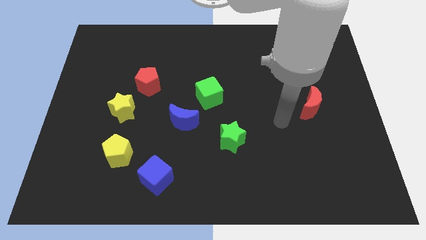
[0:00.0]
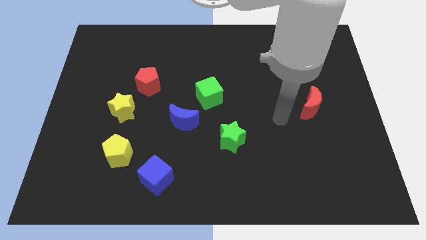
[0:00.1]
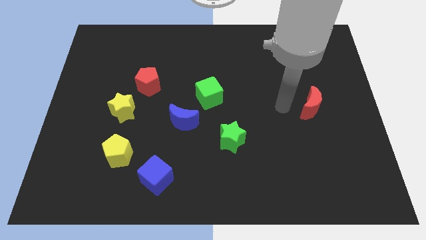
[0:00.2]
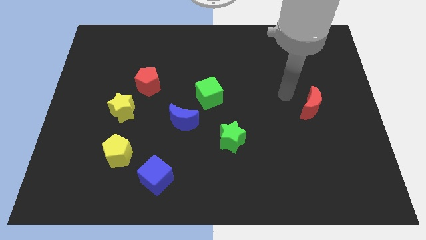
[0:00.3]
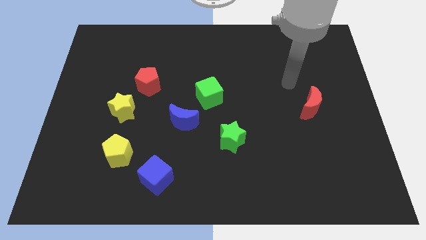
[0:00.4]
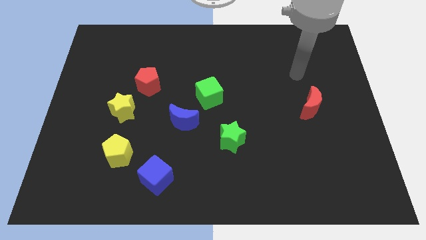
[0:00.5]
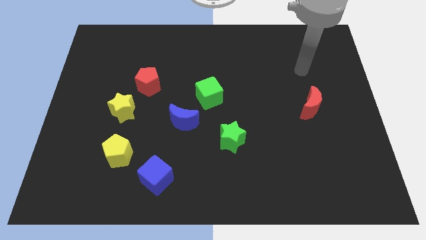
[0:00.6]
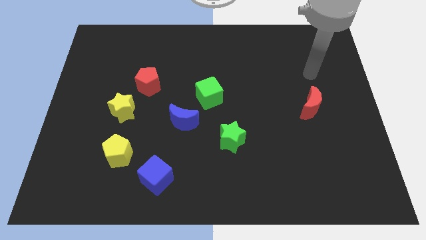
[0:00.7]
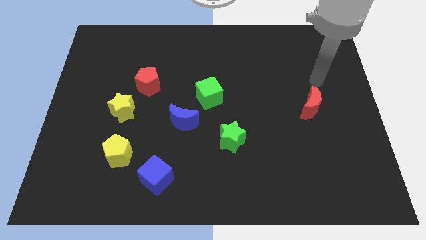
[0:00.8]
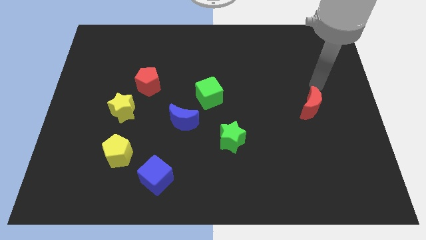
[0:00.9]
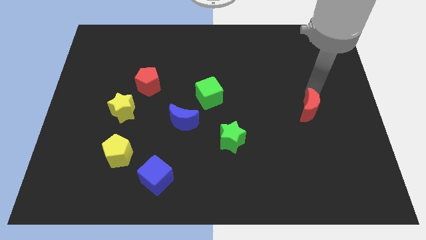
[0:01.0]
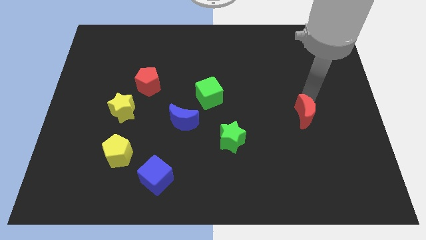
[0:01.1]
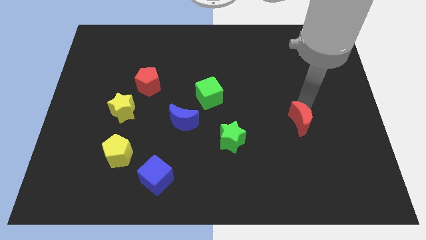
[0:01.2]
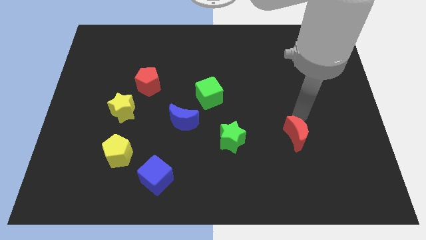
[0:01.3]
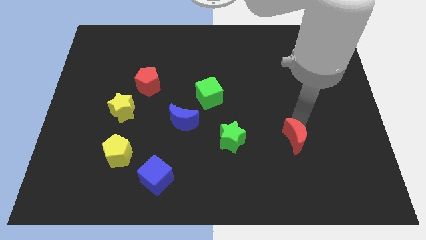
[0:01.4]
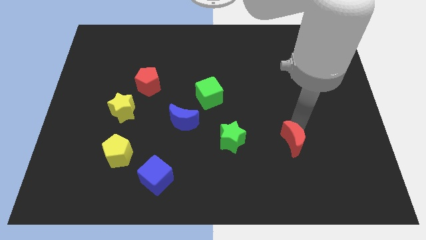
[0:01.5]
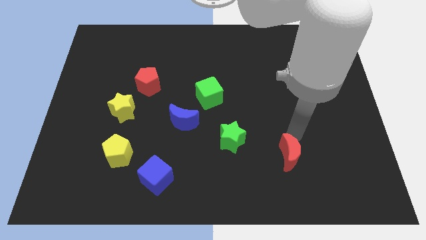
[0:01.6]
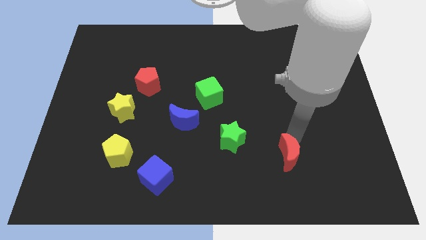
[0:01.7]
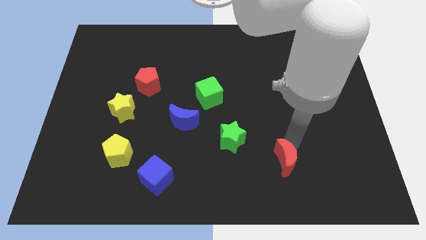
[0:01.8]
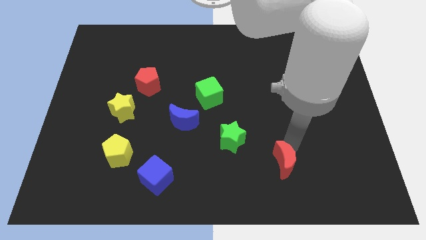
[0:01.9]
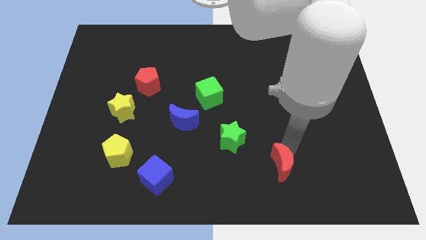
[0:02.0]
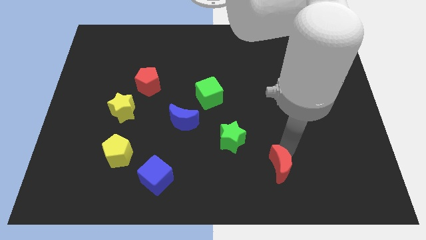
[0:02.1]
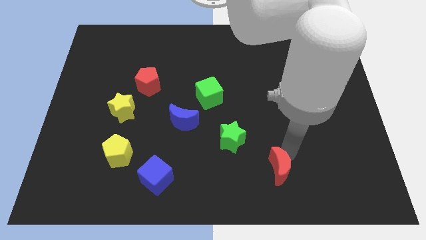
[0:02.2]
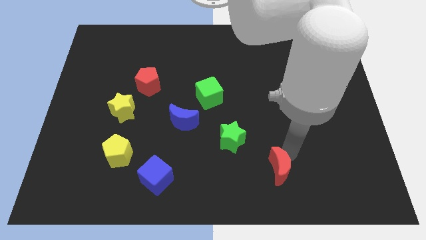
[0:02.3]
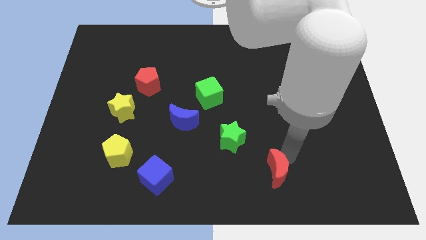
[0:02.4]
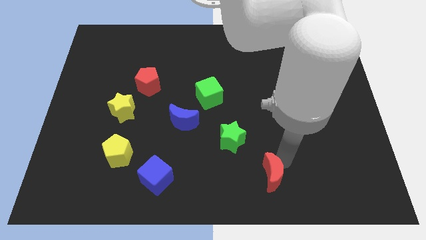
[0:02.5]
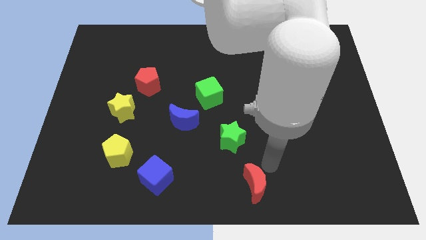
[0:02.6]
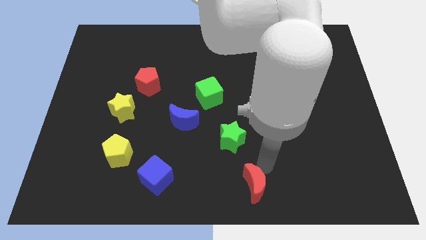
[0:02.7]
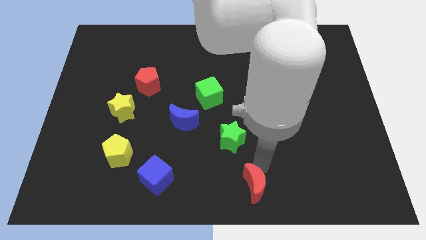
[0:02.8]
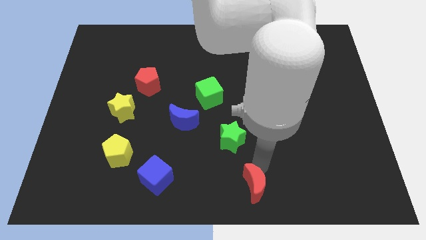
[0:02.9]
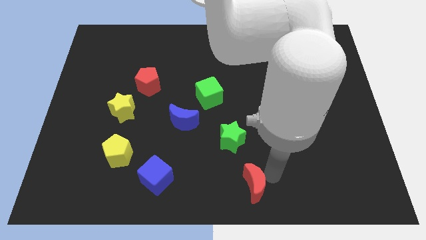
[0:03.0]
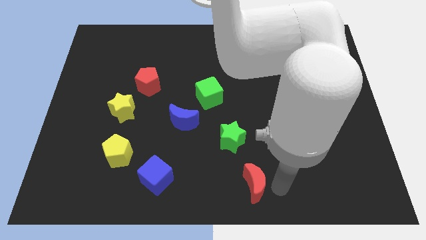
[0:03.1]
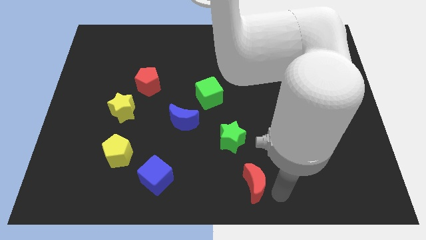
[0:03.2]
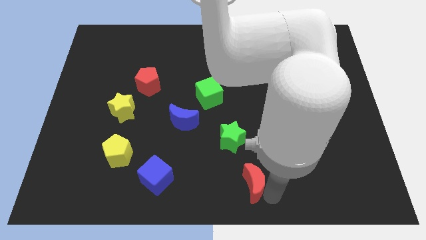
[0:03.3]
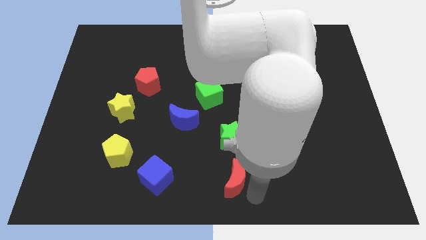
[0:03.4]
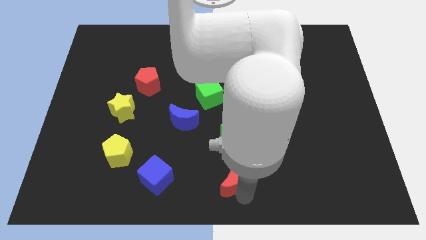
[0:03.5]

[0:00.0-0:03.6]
move red moon below green star

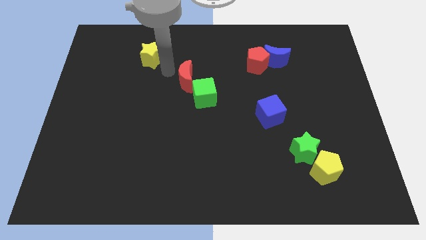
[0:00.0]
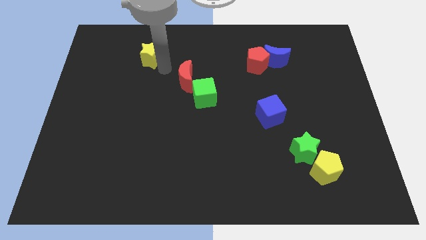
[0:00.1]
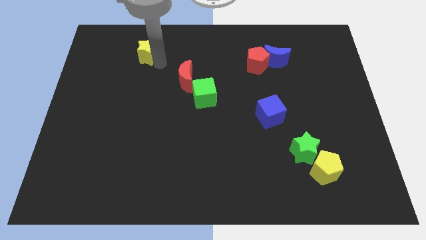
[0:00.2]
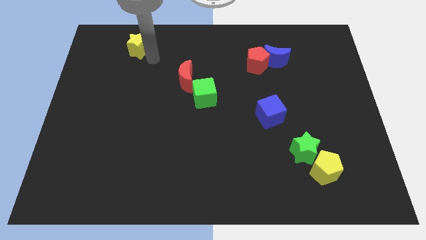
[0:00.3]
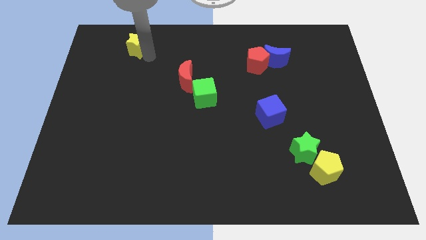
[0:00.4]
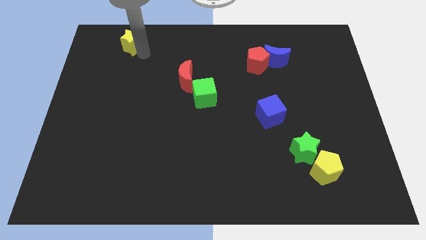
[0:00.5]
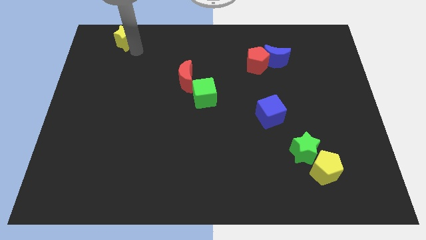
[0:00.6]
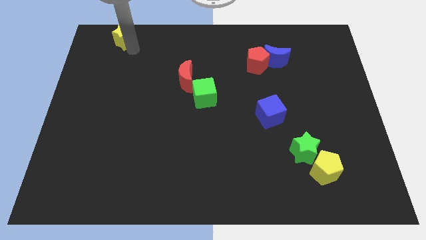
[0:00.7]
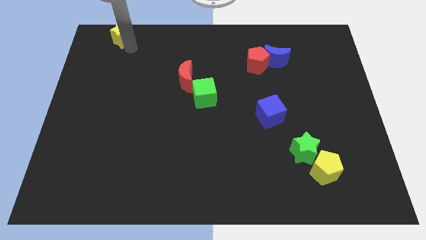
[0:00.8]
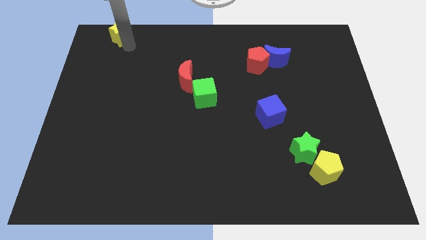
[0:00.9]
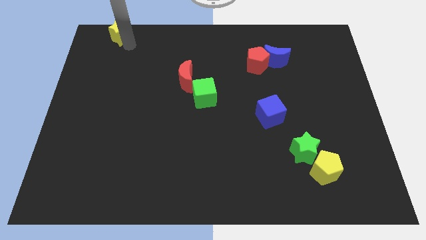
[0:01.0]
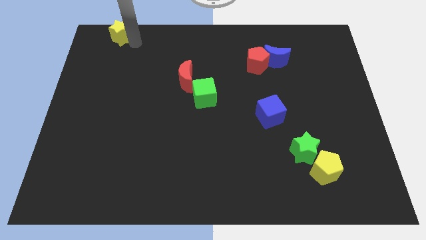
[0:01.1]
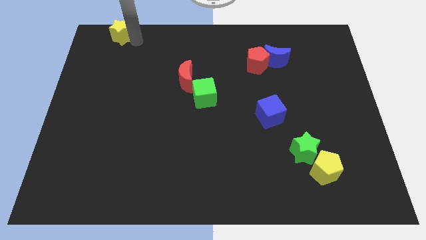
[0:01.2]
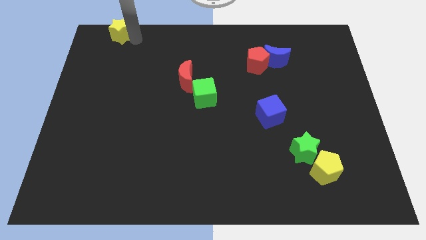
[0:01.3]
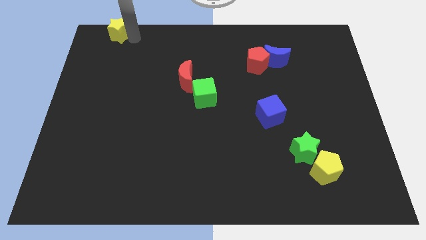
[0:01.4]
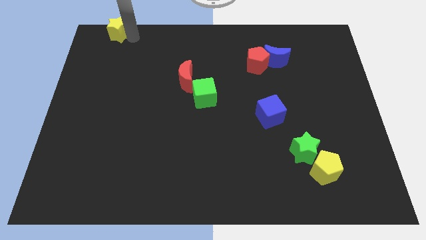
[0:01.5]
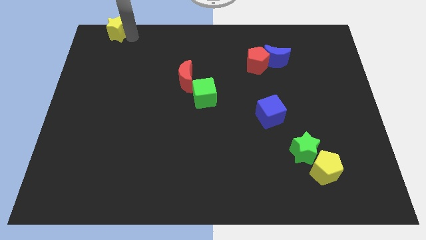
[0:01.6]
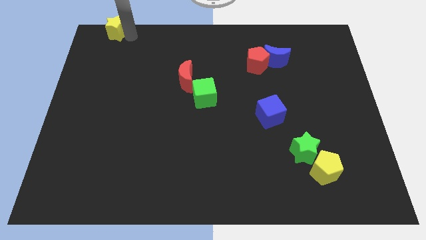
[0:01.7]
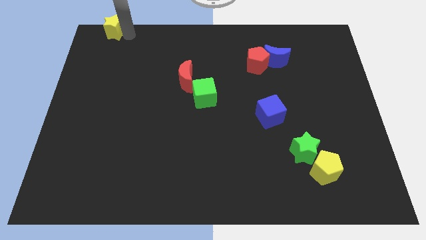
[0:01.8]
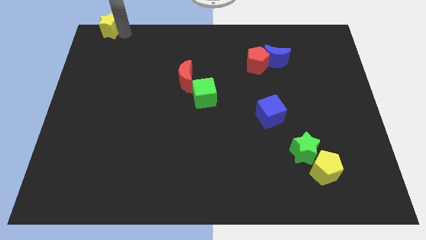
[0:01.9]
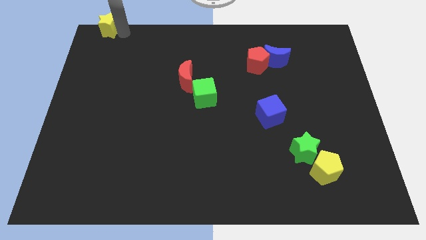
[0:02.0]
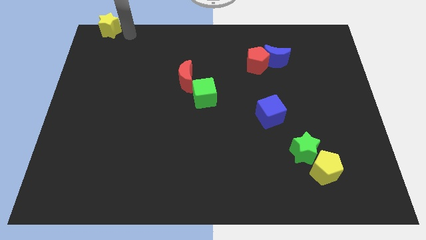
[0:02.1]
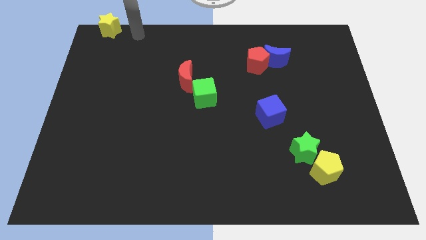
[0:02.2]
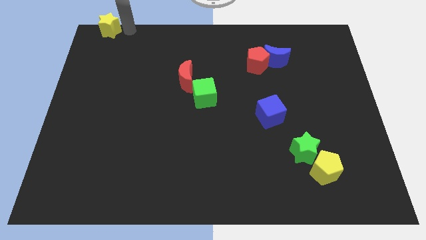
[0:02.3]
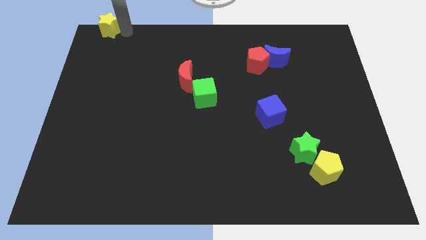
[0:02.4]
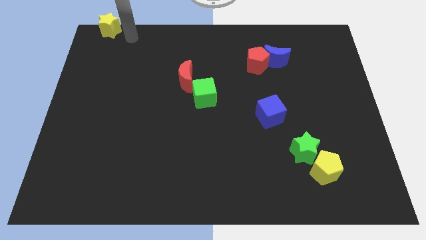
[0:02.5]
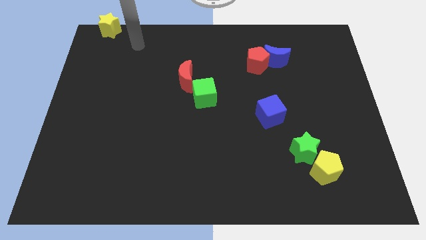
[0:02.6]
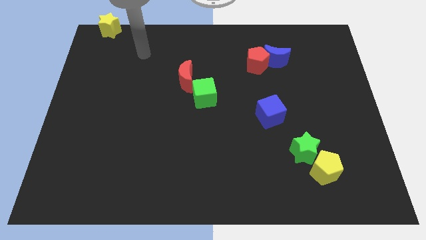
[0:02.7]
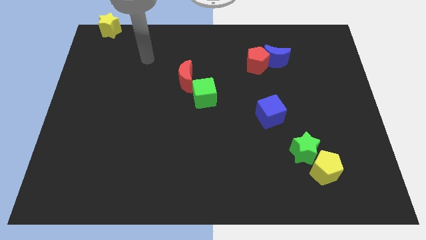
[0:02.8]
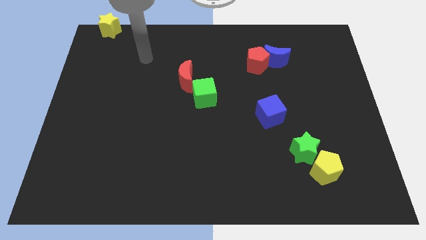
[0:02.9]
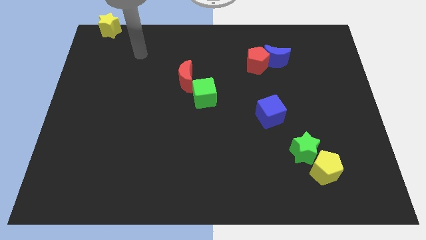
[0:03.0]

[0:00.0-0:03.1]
put the yellow star at the top left corner of the board

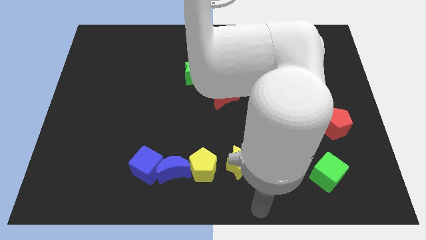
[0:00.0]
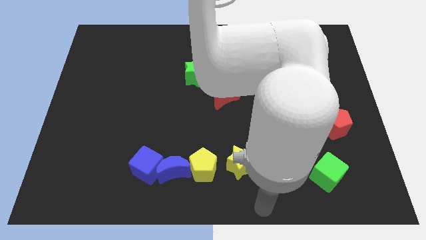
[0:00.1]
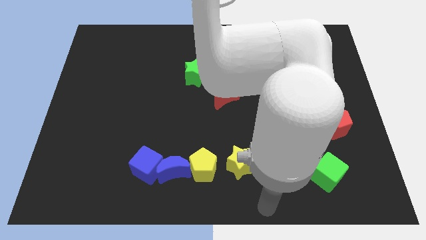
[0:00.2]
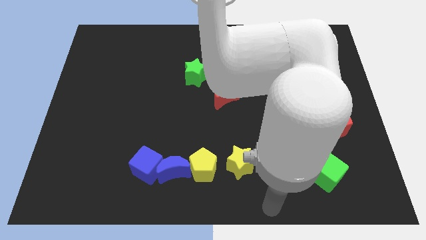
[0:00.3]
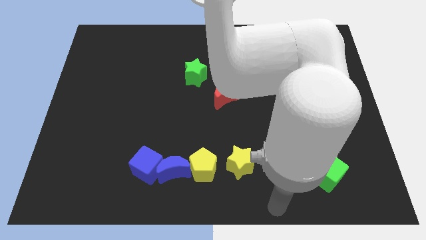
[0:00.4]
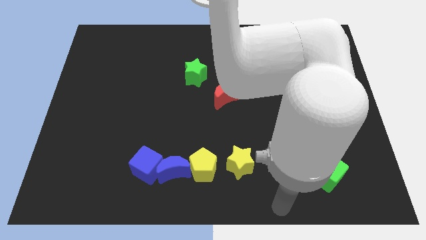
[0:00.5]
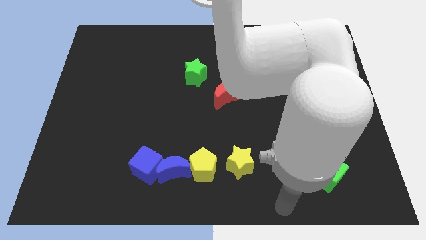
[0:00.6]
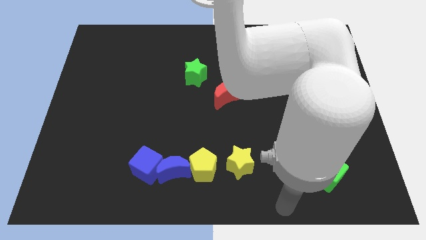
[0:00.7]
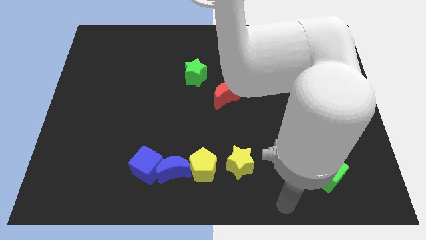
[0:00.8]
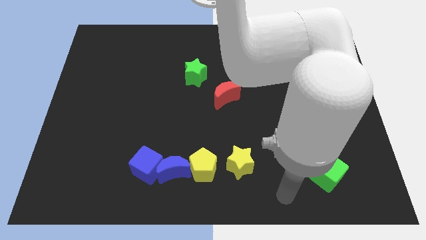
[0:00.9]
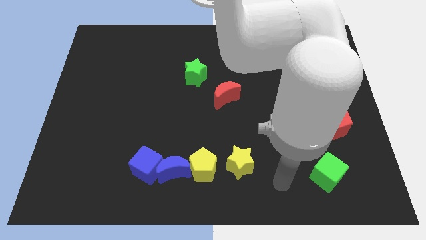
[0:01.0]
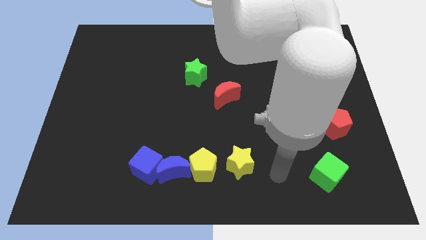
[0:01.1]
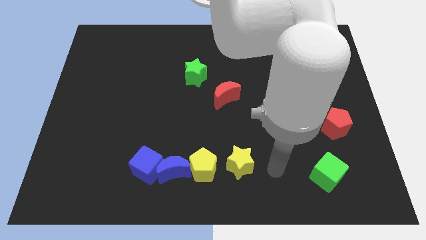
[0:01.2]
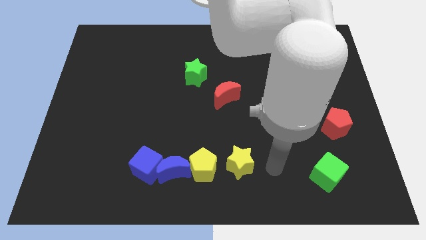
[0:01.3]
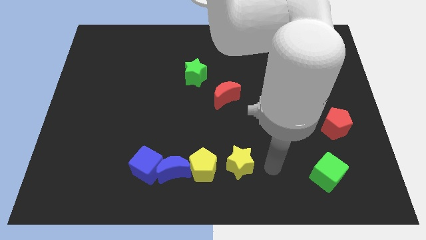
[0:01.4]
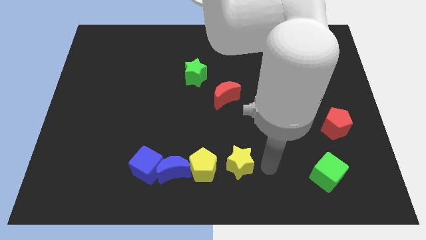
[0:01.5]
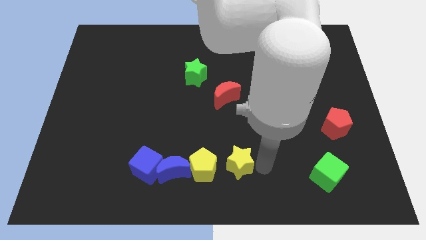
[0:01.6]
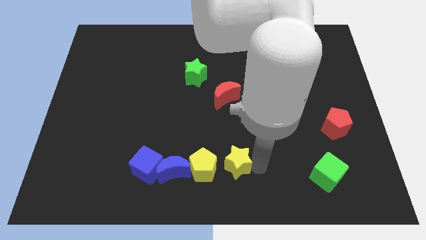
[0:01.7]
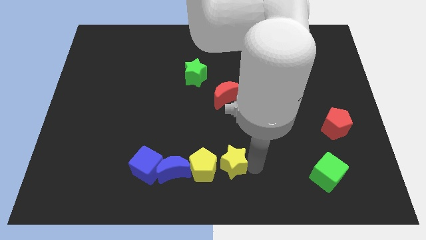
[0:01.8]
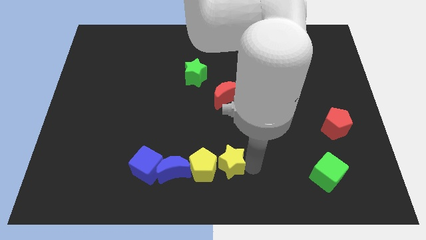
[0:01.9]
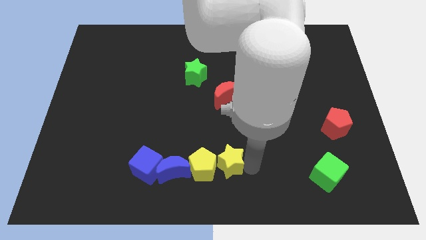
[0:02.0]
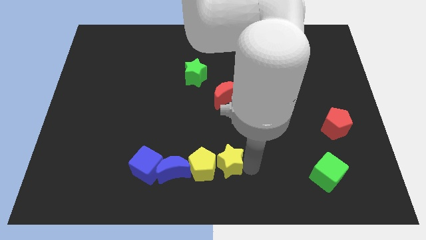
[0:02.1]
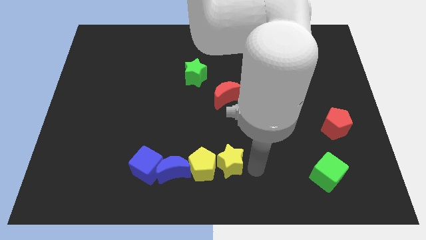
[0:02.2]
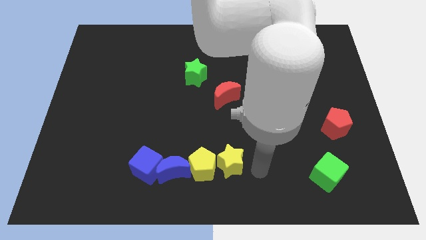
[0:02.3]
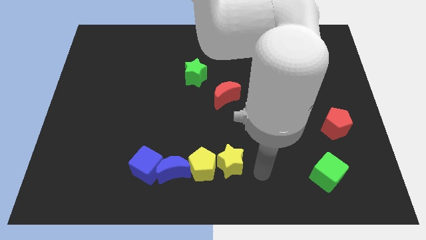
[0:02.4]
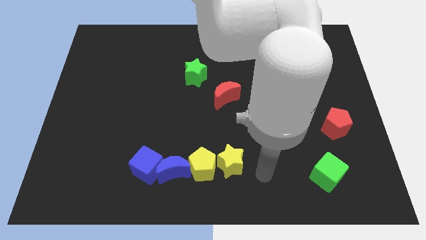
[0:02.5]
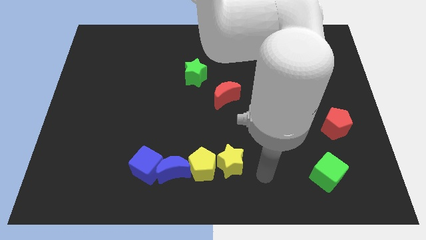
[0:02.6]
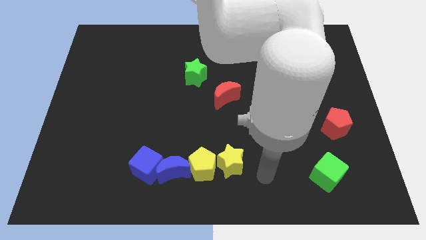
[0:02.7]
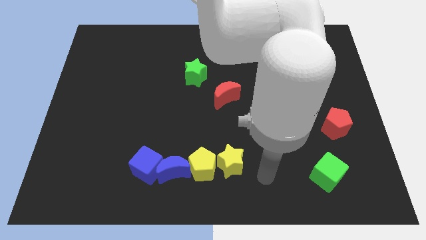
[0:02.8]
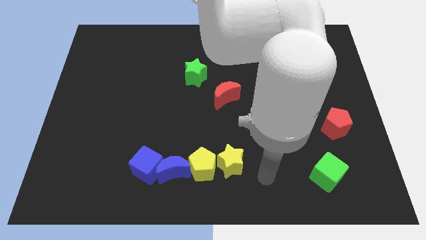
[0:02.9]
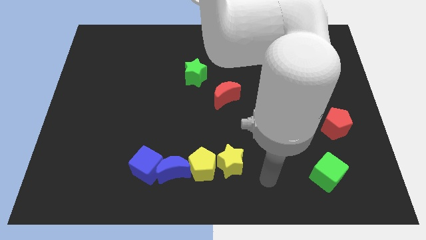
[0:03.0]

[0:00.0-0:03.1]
move the yellow star into the yellow pentagon
